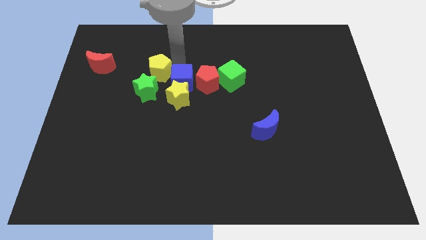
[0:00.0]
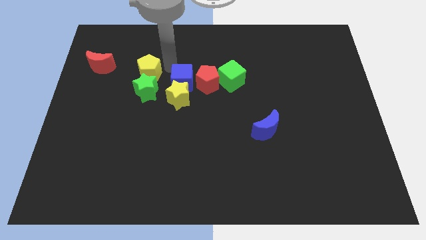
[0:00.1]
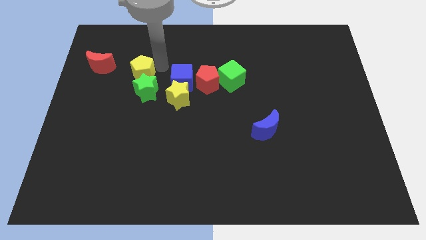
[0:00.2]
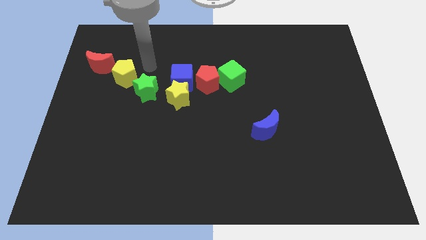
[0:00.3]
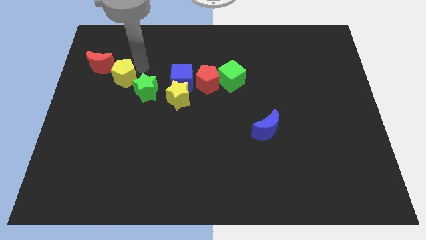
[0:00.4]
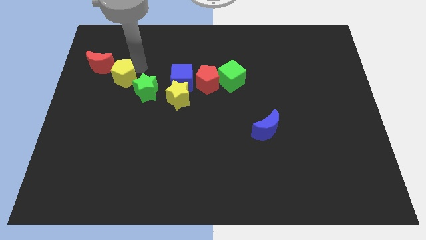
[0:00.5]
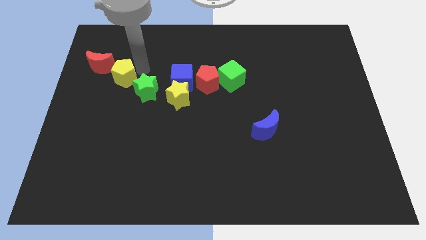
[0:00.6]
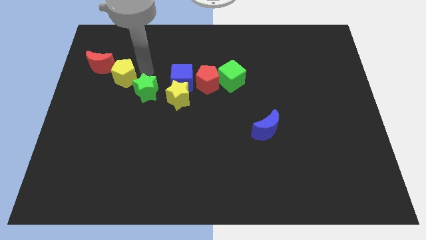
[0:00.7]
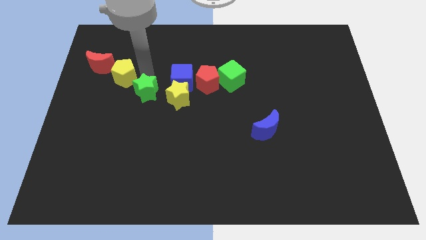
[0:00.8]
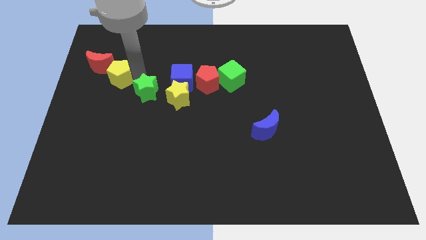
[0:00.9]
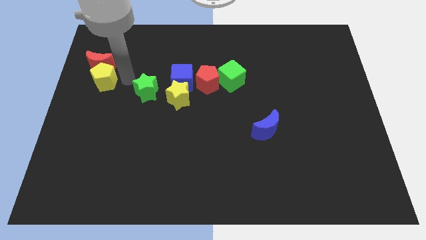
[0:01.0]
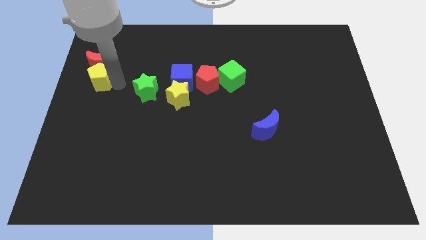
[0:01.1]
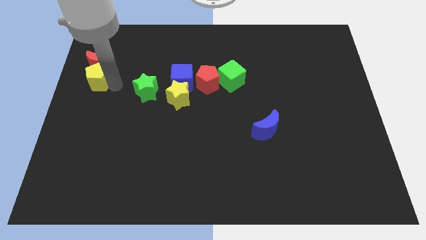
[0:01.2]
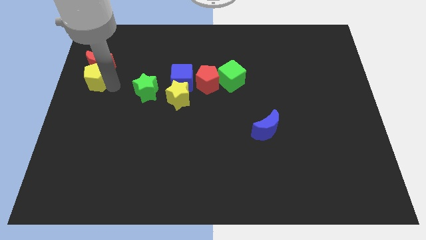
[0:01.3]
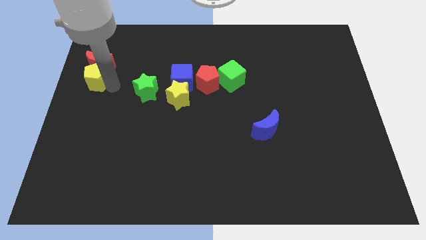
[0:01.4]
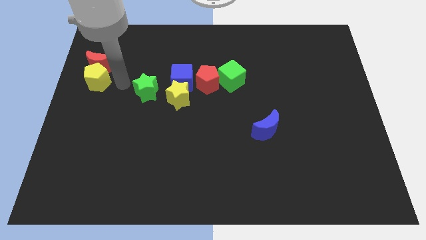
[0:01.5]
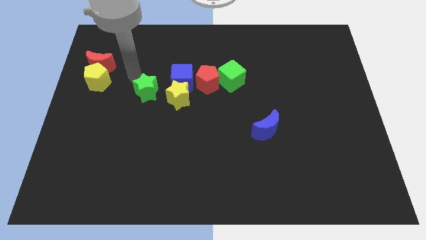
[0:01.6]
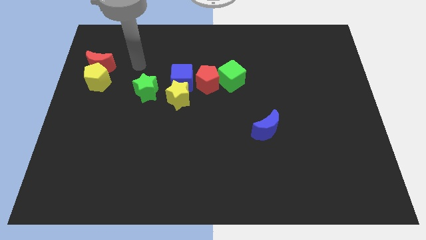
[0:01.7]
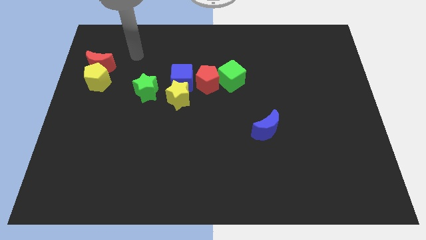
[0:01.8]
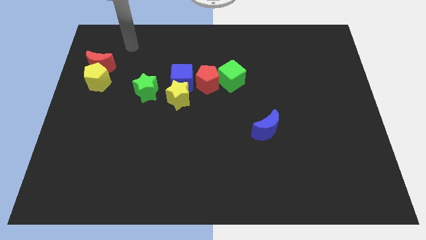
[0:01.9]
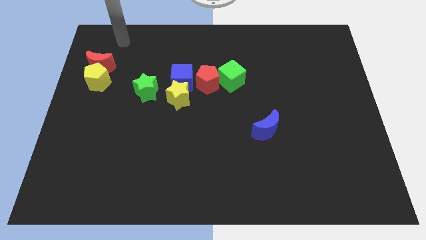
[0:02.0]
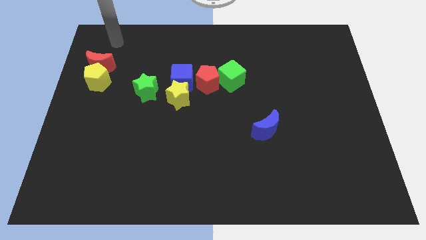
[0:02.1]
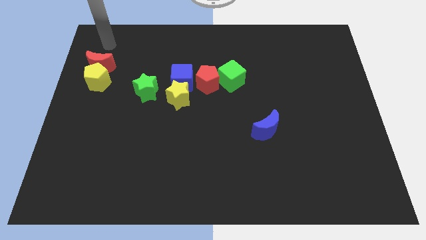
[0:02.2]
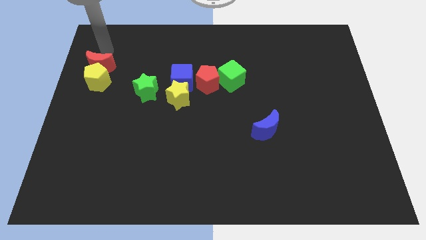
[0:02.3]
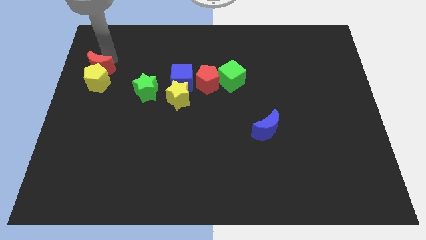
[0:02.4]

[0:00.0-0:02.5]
move the yellow pentagon to the bottom of red crescent

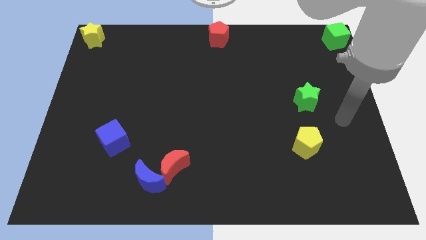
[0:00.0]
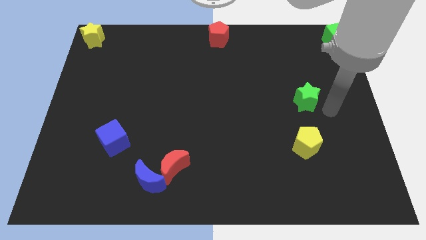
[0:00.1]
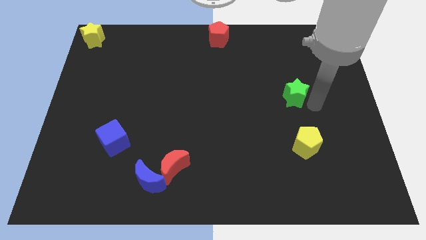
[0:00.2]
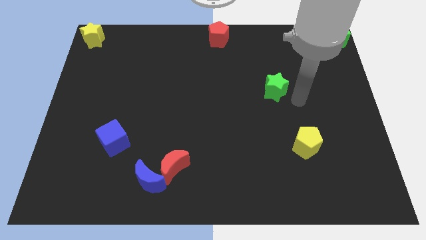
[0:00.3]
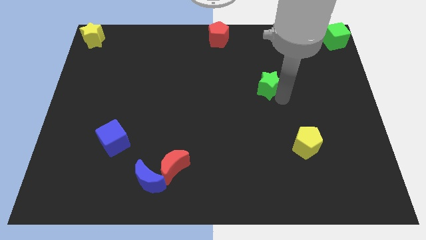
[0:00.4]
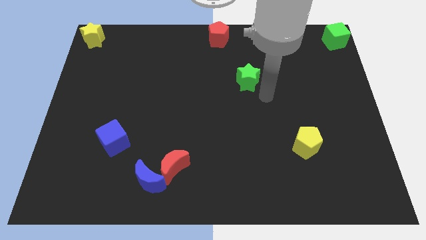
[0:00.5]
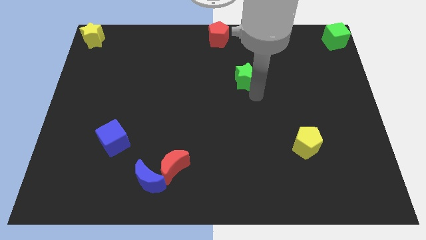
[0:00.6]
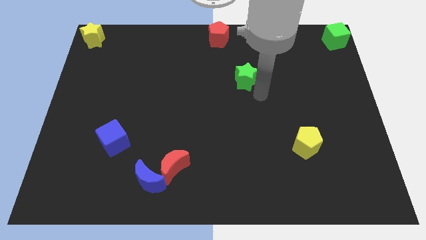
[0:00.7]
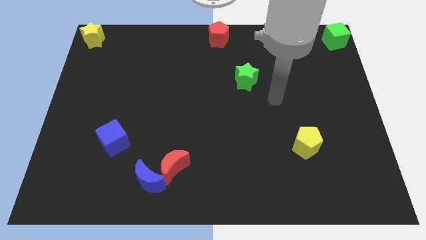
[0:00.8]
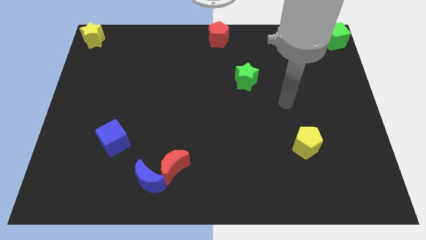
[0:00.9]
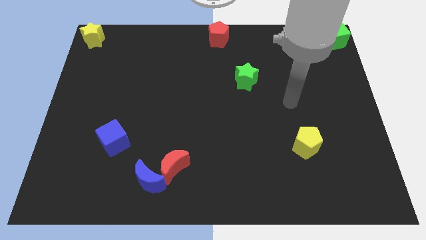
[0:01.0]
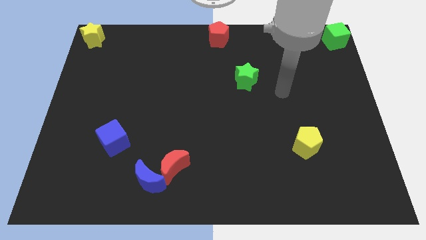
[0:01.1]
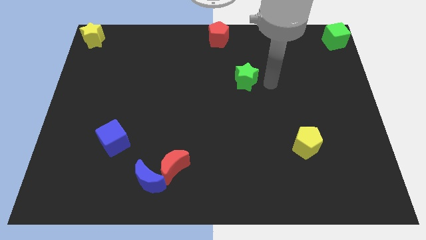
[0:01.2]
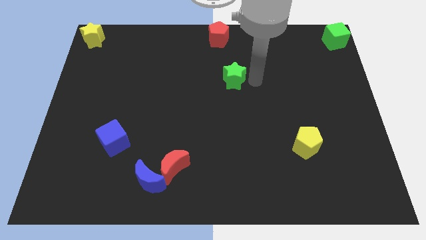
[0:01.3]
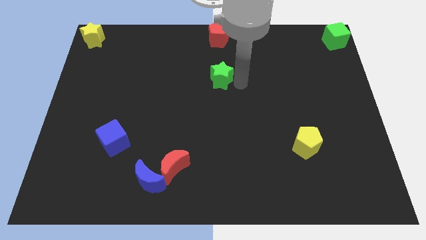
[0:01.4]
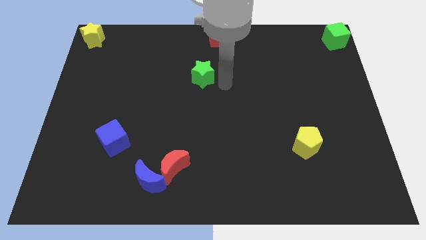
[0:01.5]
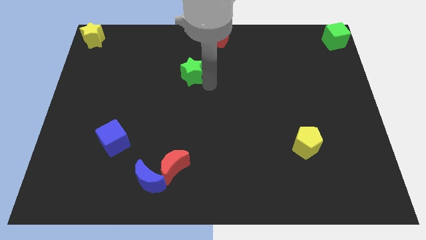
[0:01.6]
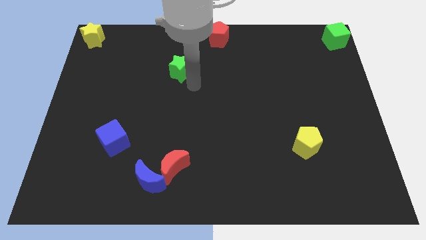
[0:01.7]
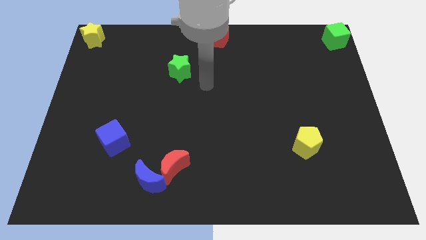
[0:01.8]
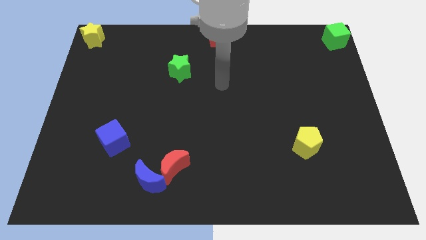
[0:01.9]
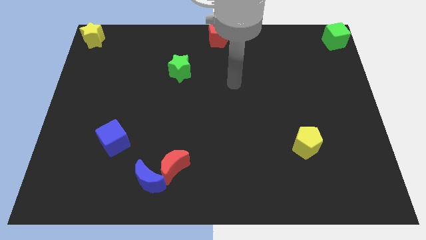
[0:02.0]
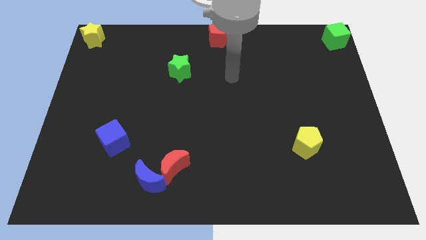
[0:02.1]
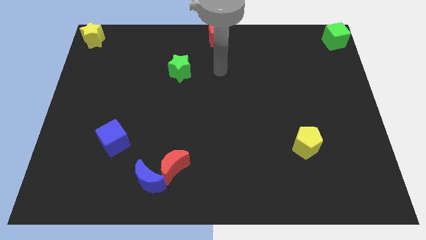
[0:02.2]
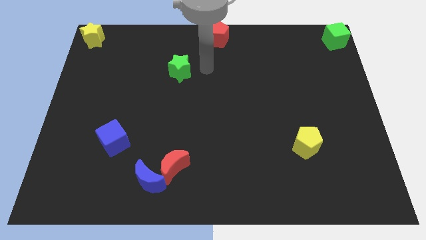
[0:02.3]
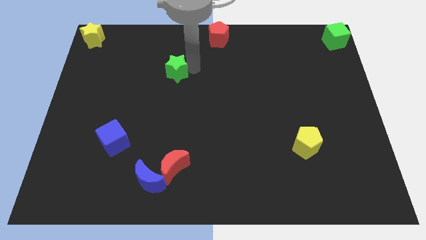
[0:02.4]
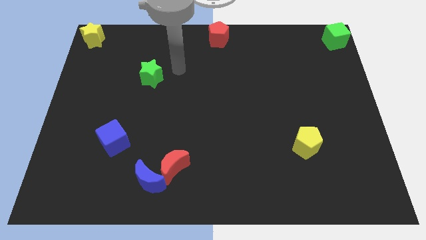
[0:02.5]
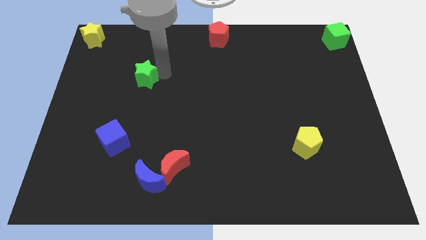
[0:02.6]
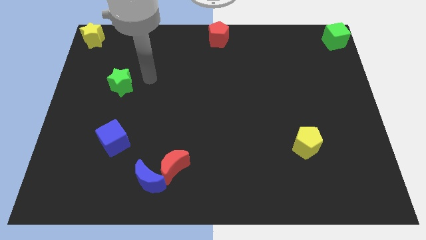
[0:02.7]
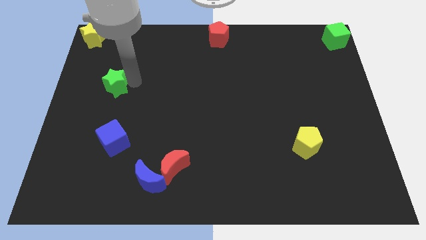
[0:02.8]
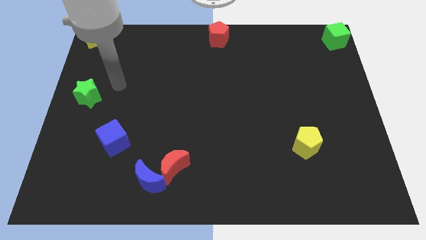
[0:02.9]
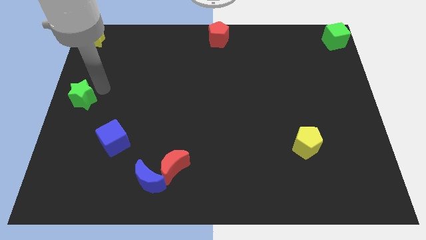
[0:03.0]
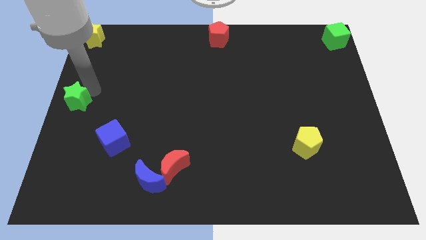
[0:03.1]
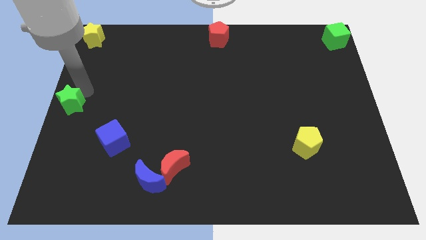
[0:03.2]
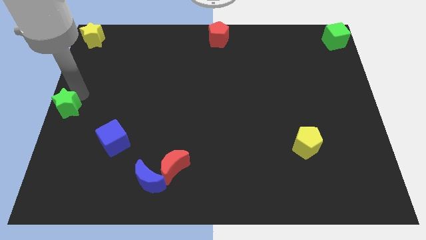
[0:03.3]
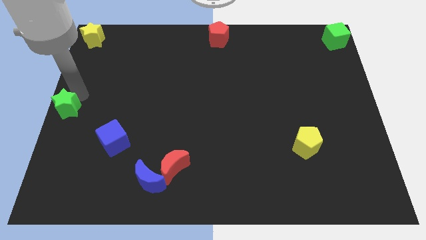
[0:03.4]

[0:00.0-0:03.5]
slide the green star to the left center of the board

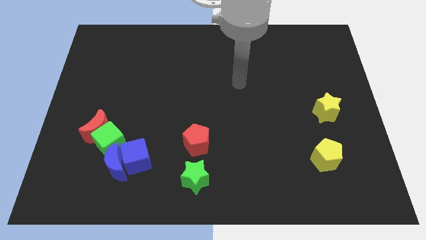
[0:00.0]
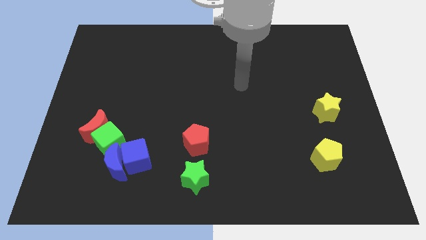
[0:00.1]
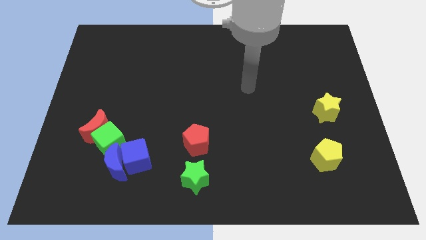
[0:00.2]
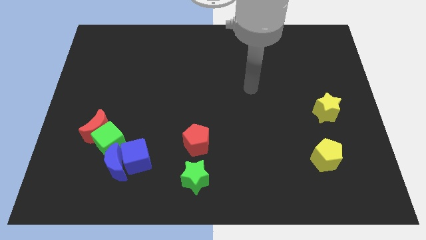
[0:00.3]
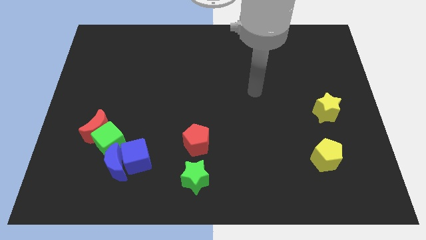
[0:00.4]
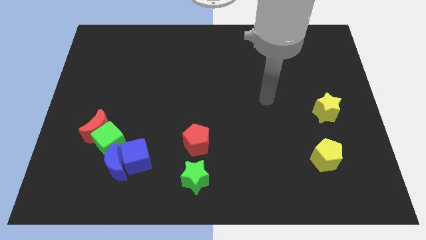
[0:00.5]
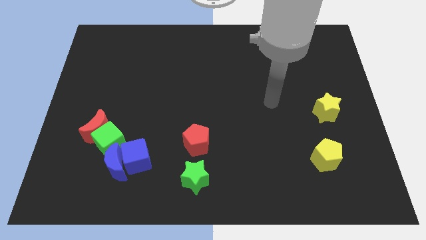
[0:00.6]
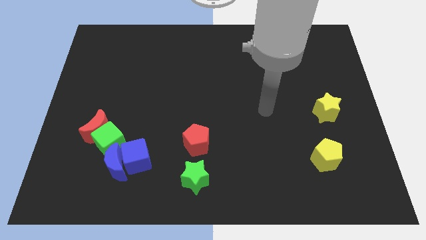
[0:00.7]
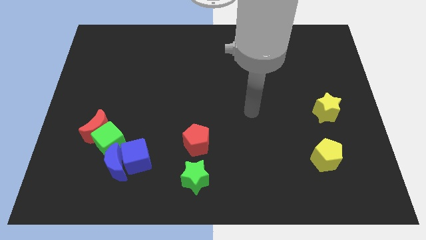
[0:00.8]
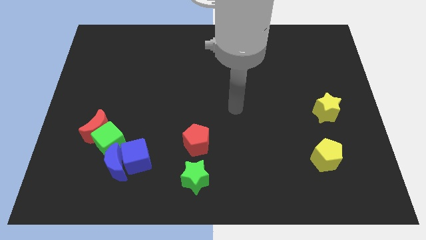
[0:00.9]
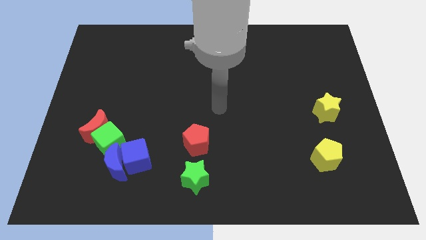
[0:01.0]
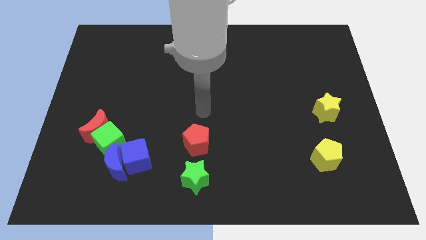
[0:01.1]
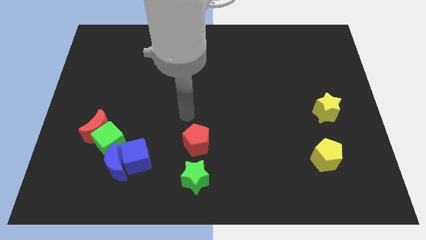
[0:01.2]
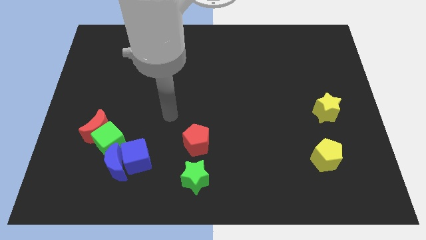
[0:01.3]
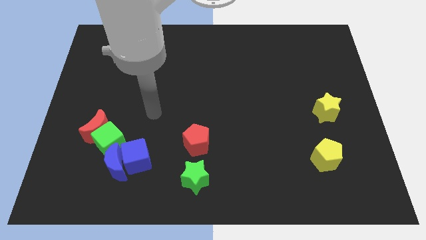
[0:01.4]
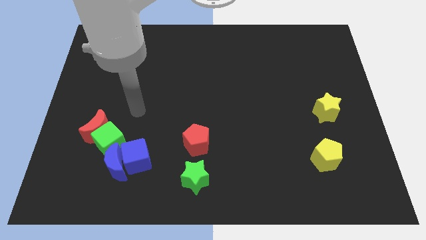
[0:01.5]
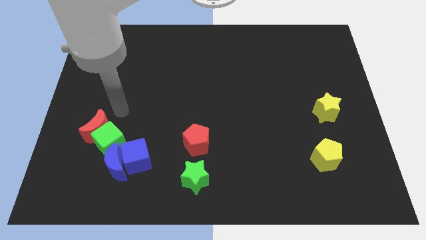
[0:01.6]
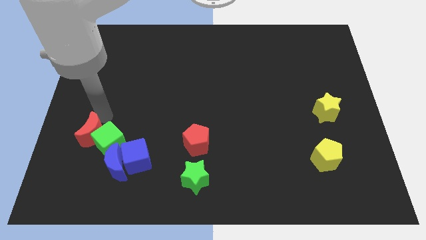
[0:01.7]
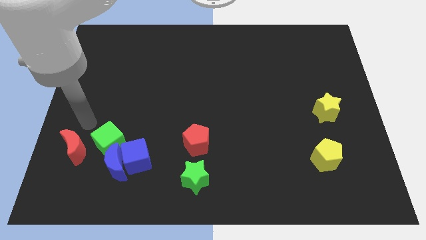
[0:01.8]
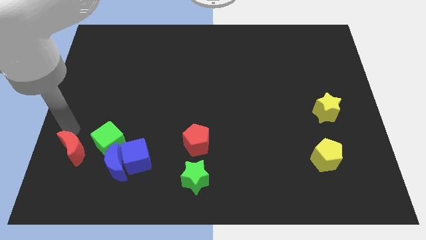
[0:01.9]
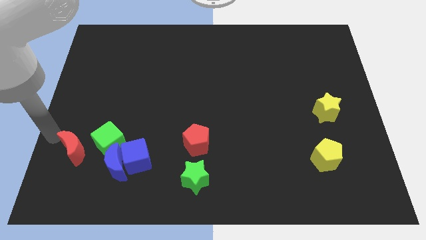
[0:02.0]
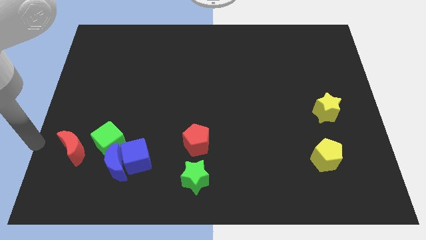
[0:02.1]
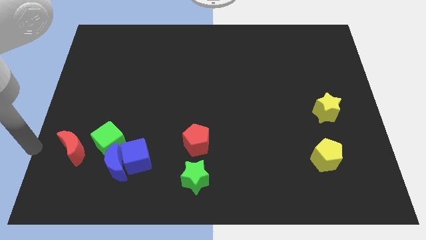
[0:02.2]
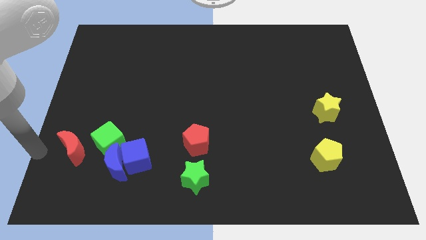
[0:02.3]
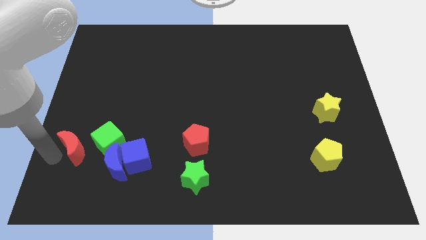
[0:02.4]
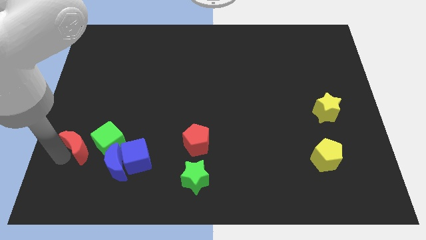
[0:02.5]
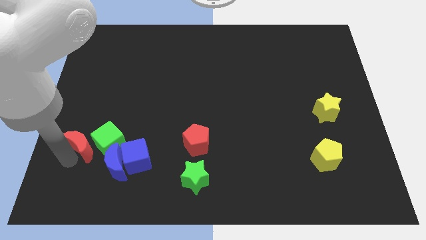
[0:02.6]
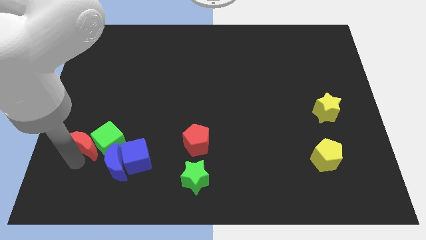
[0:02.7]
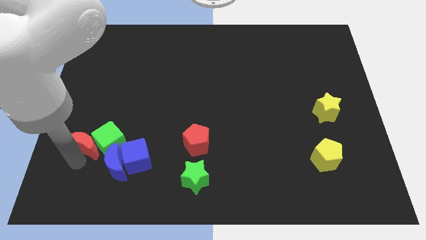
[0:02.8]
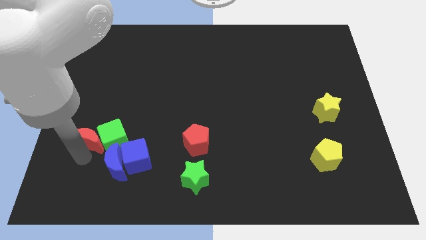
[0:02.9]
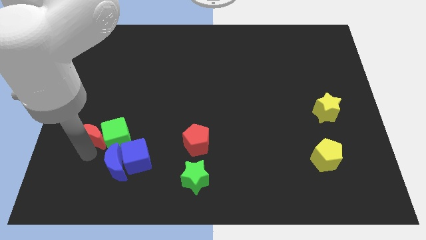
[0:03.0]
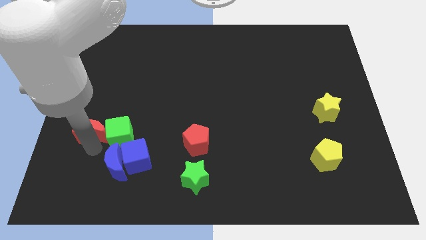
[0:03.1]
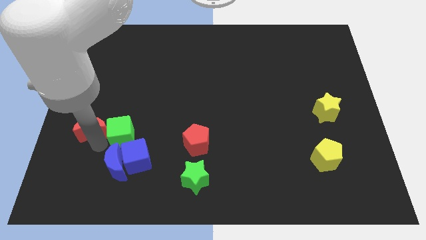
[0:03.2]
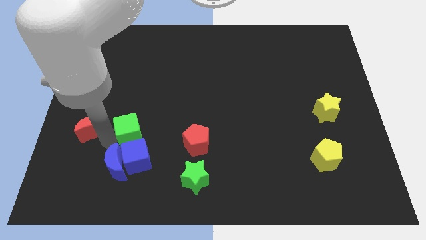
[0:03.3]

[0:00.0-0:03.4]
push red crescent beside green cube
